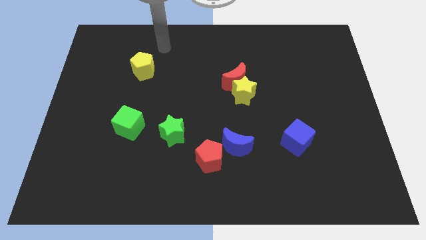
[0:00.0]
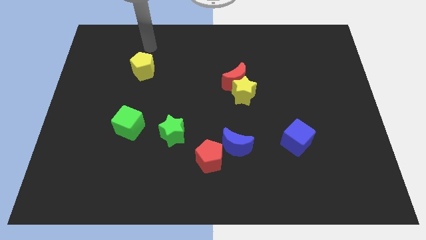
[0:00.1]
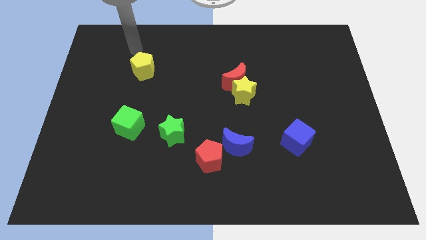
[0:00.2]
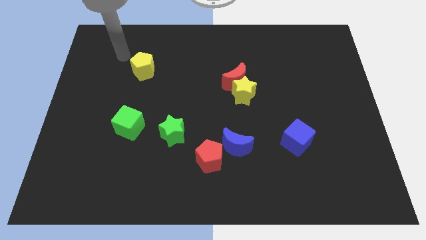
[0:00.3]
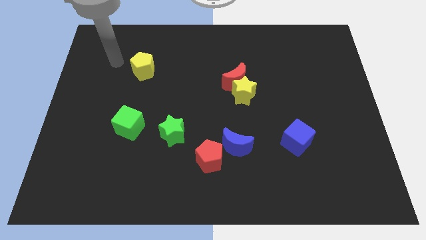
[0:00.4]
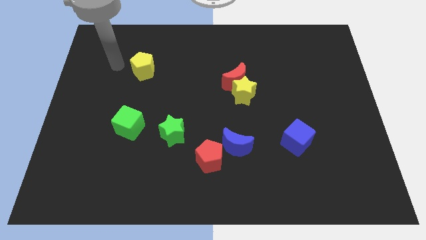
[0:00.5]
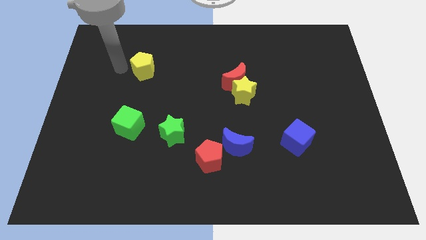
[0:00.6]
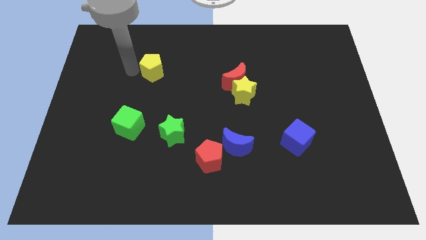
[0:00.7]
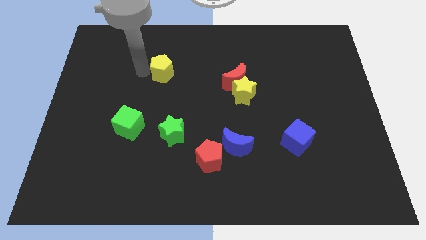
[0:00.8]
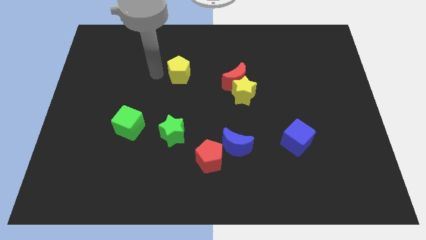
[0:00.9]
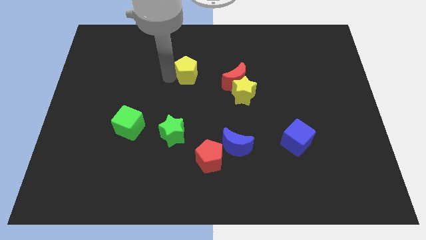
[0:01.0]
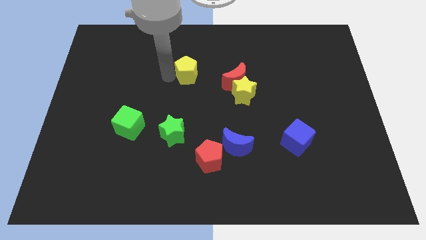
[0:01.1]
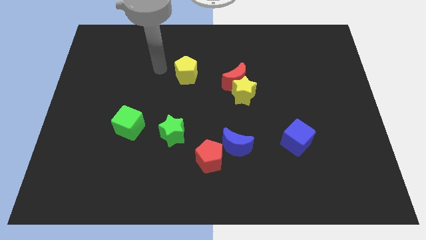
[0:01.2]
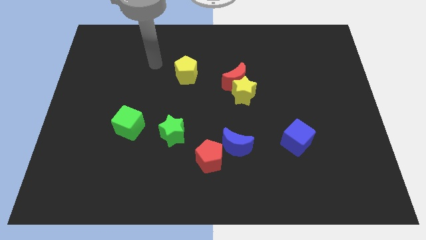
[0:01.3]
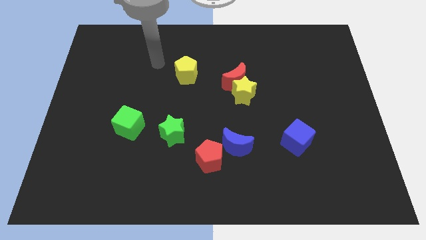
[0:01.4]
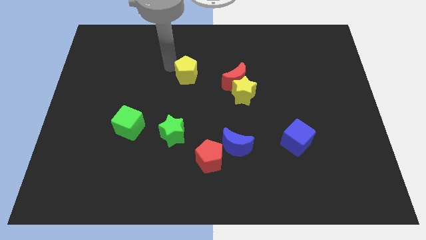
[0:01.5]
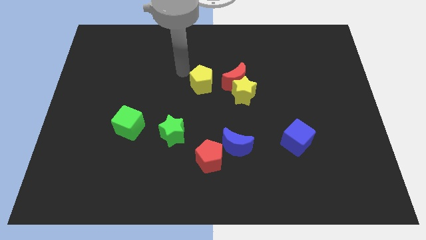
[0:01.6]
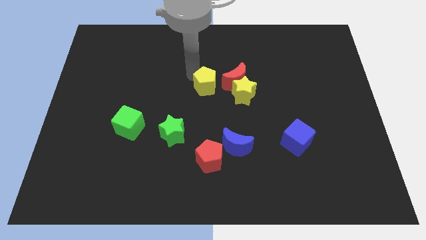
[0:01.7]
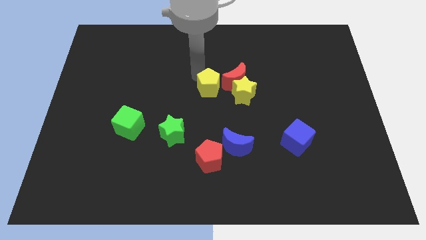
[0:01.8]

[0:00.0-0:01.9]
move the yellow pentagon close left to the red crescent and yellow star

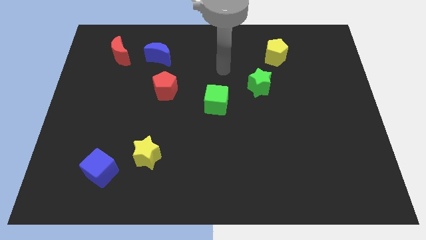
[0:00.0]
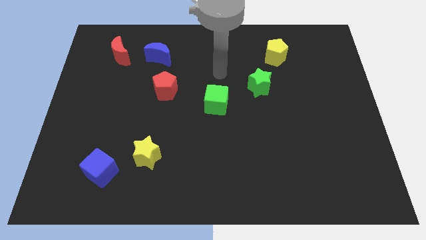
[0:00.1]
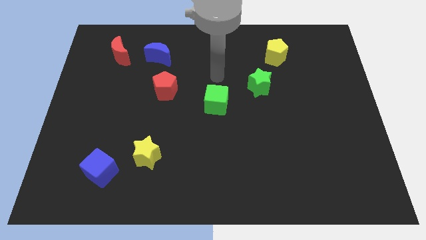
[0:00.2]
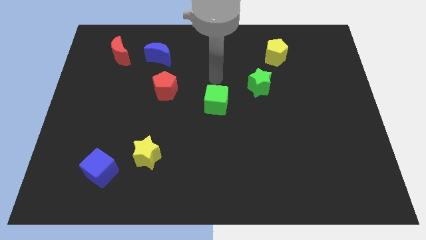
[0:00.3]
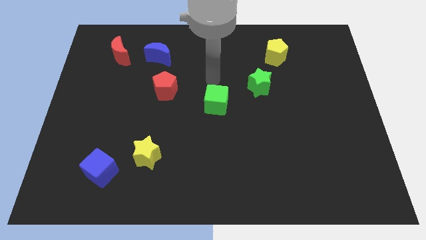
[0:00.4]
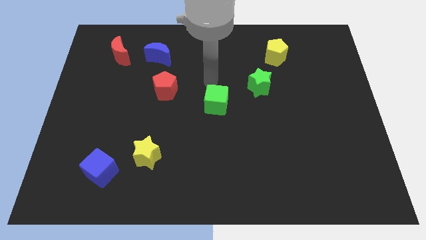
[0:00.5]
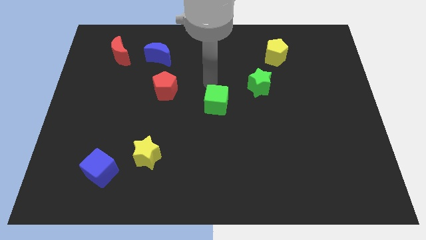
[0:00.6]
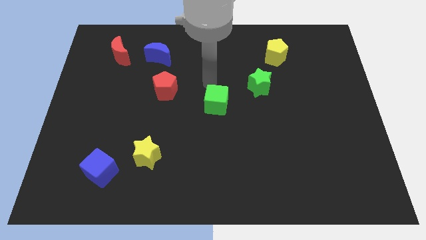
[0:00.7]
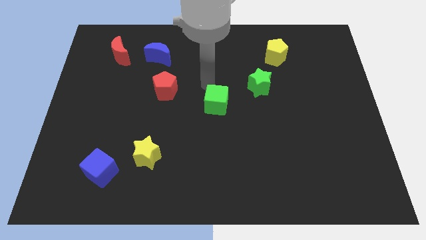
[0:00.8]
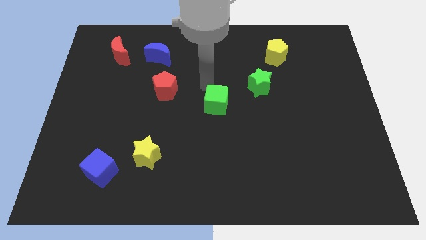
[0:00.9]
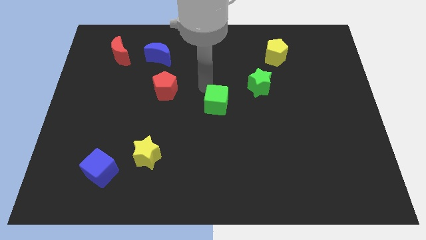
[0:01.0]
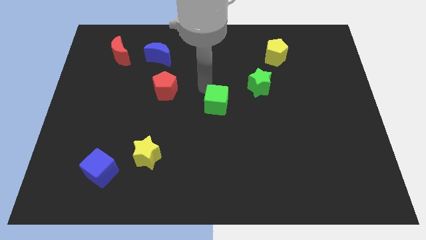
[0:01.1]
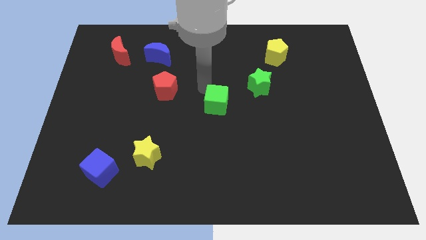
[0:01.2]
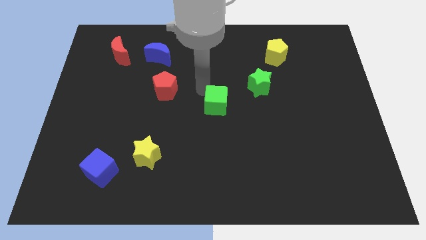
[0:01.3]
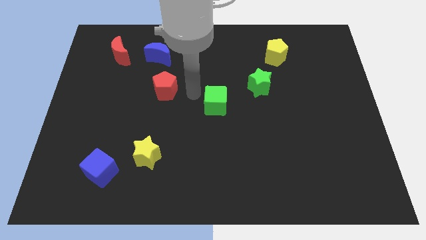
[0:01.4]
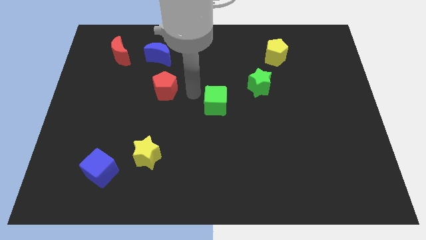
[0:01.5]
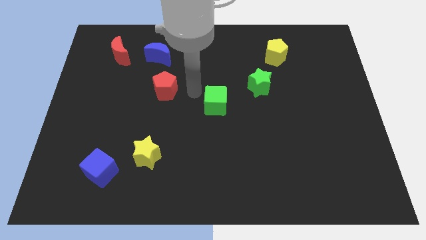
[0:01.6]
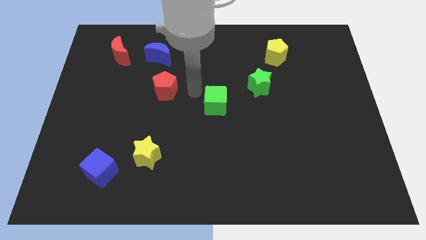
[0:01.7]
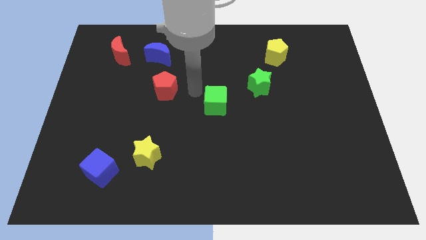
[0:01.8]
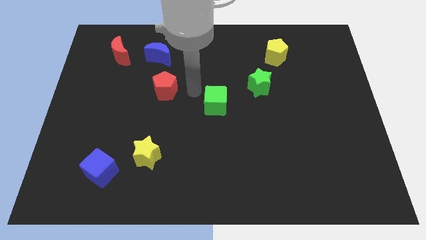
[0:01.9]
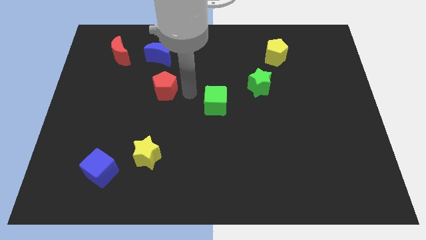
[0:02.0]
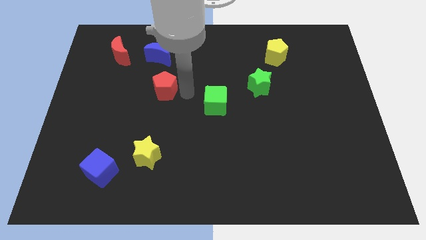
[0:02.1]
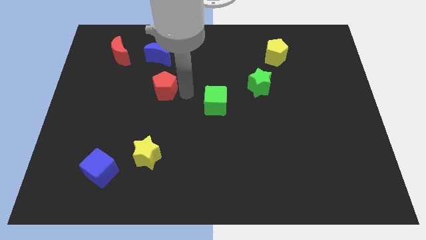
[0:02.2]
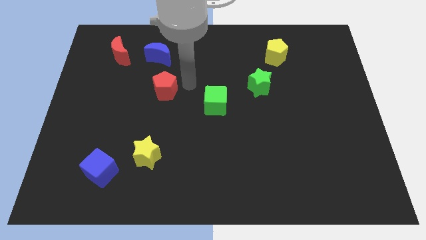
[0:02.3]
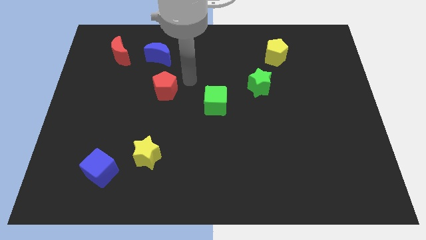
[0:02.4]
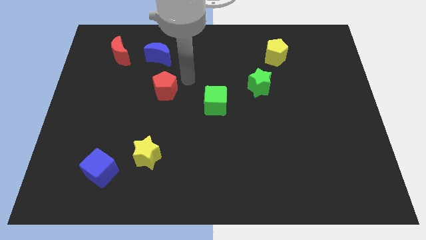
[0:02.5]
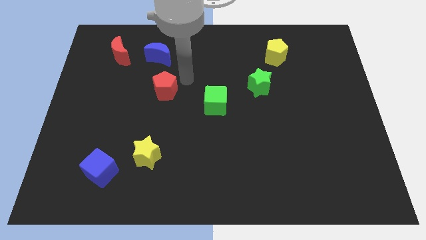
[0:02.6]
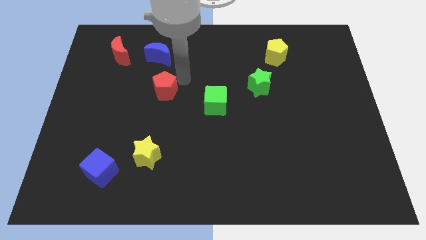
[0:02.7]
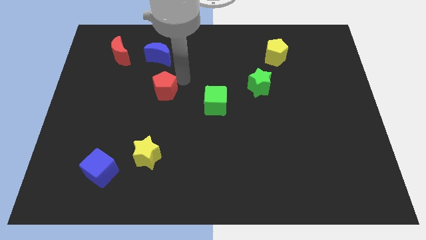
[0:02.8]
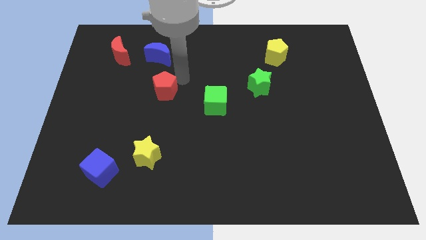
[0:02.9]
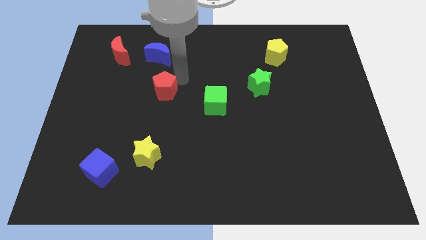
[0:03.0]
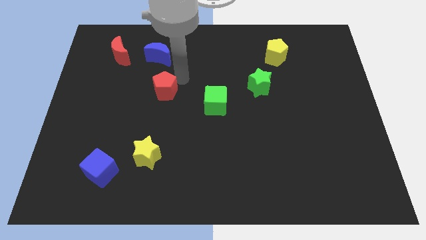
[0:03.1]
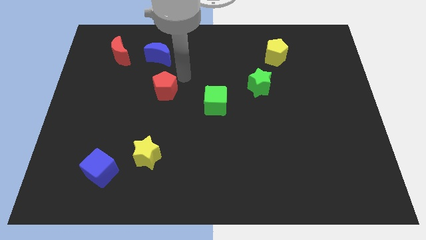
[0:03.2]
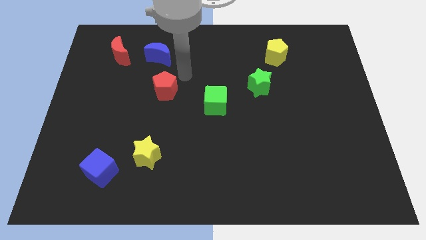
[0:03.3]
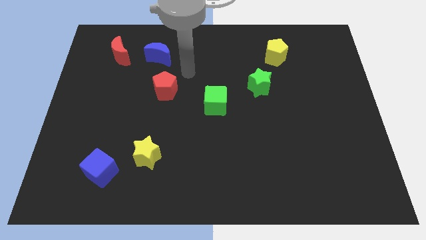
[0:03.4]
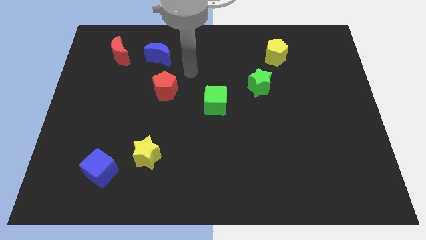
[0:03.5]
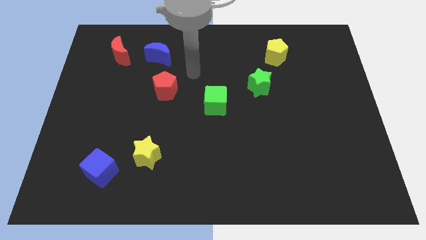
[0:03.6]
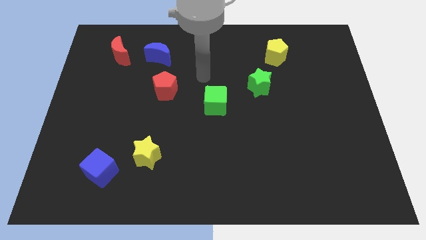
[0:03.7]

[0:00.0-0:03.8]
tap the top left of the green cube and go away

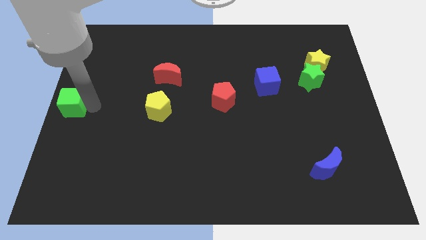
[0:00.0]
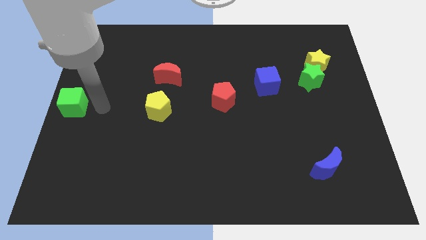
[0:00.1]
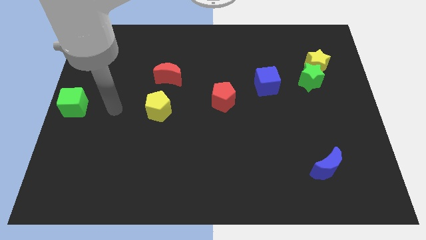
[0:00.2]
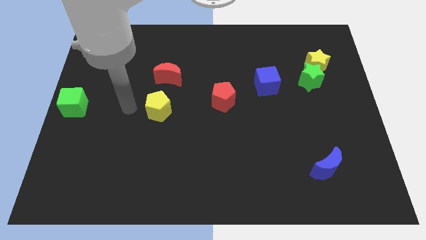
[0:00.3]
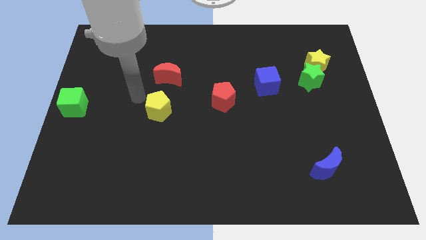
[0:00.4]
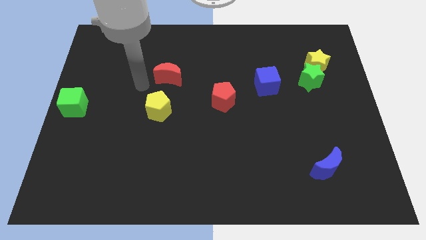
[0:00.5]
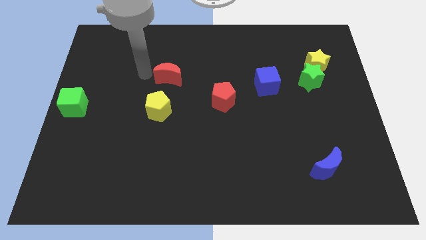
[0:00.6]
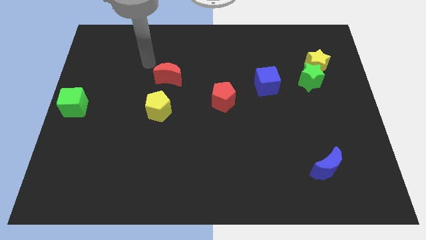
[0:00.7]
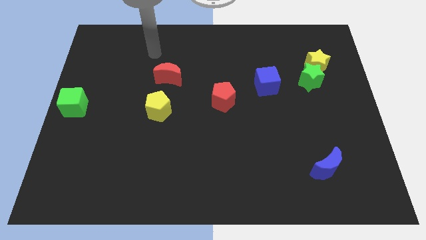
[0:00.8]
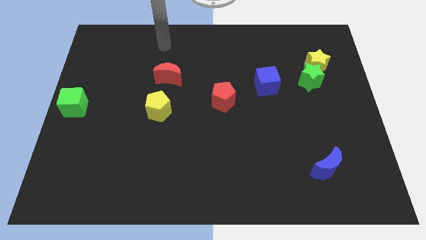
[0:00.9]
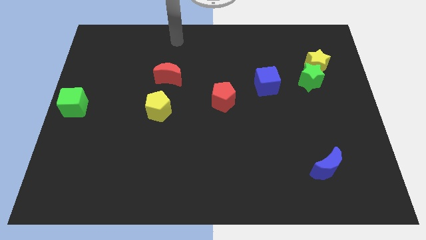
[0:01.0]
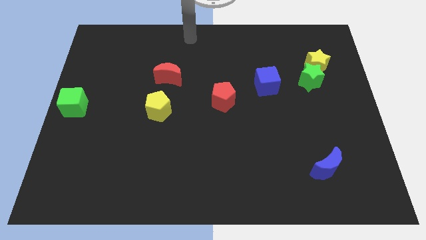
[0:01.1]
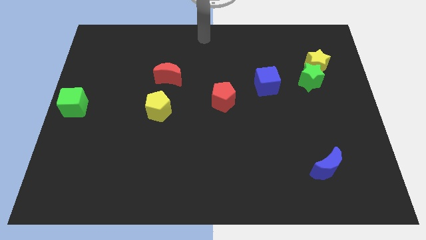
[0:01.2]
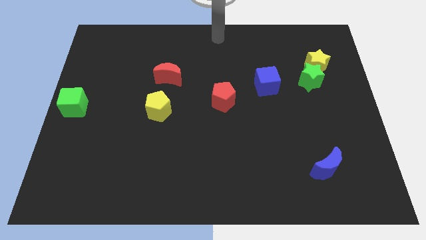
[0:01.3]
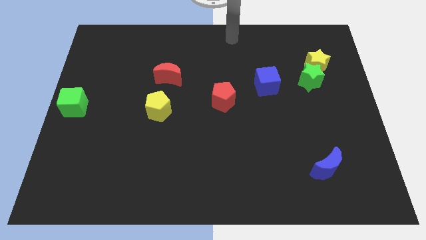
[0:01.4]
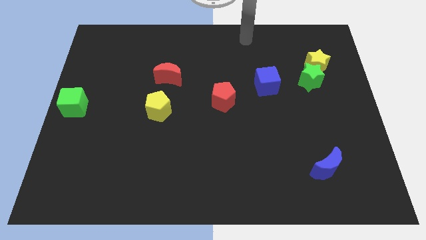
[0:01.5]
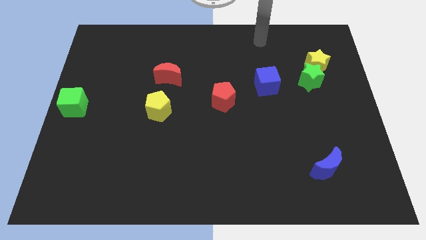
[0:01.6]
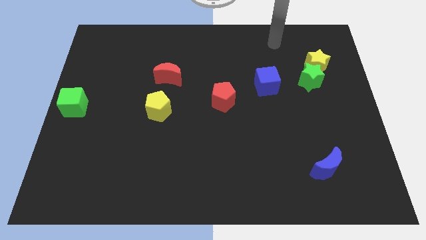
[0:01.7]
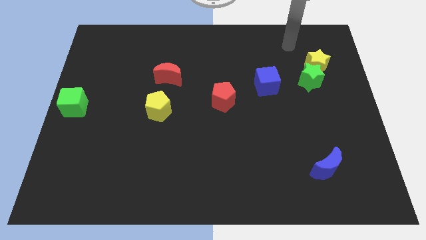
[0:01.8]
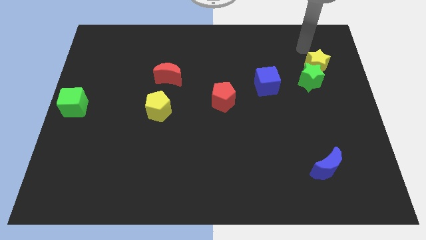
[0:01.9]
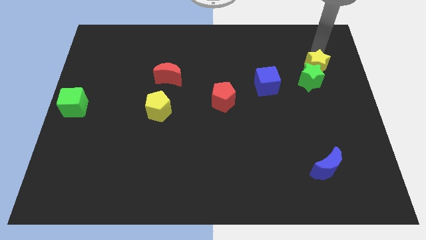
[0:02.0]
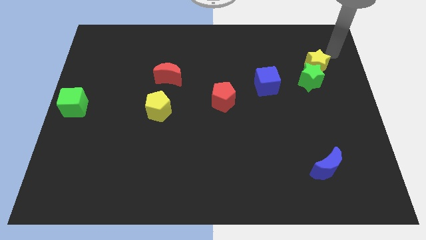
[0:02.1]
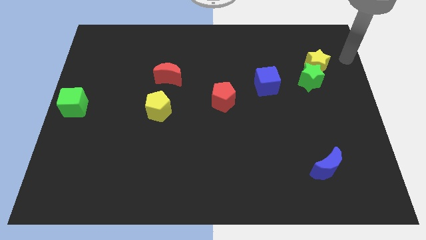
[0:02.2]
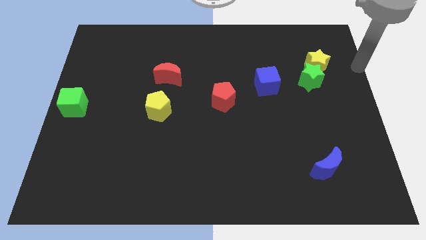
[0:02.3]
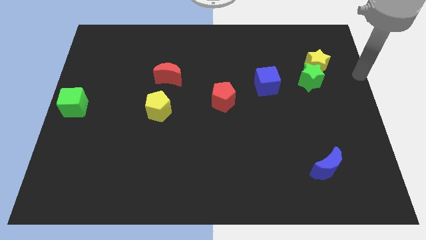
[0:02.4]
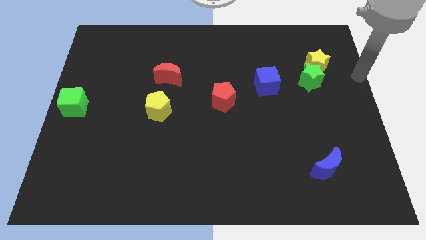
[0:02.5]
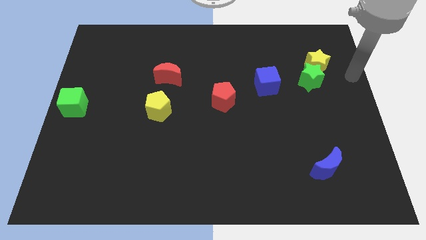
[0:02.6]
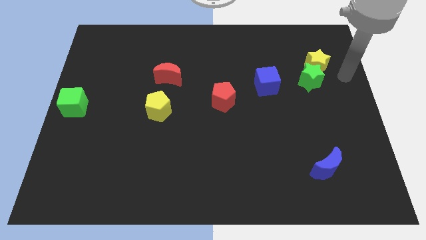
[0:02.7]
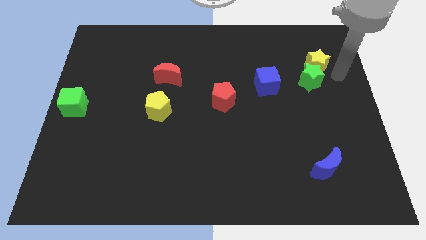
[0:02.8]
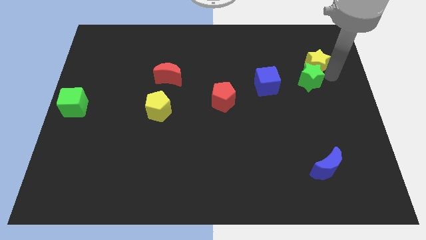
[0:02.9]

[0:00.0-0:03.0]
move your arm away form the green cube
